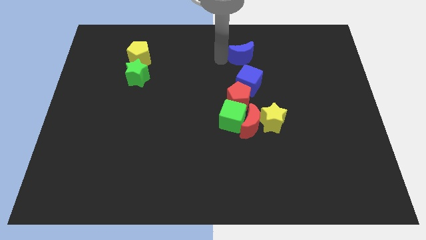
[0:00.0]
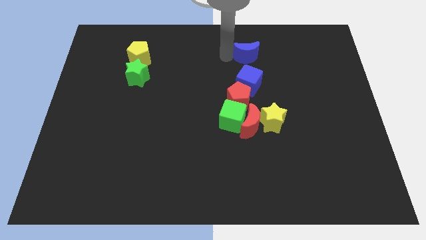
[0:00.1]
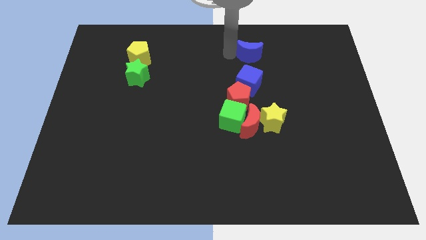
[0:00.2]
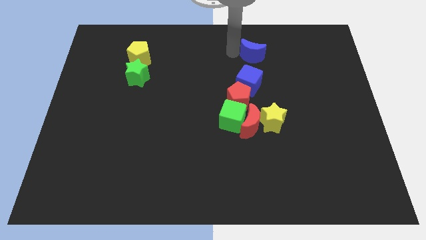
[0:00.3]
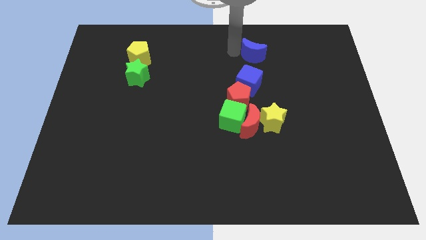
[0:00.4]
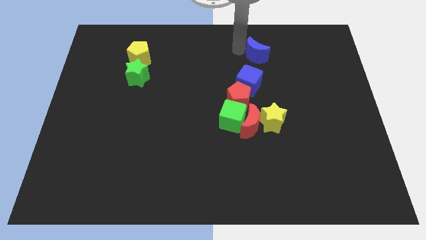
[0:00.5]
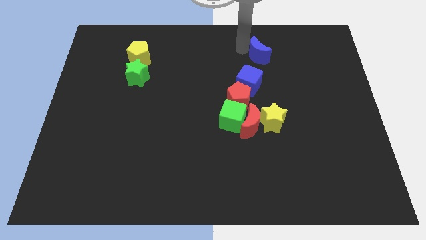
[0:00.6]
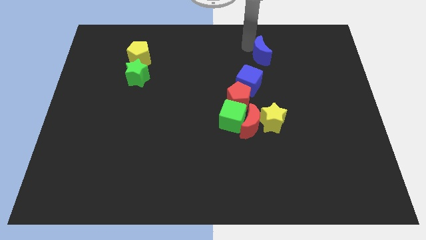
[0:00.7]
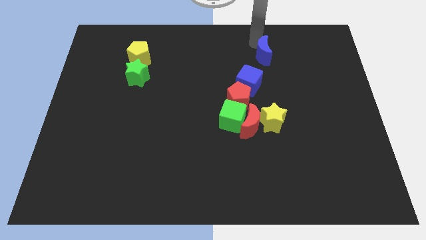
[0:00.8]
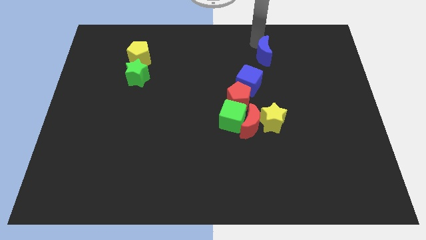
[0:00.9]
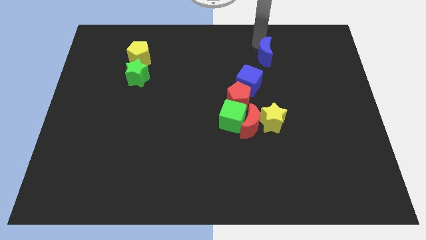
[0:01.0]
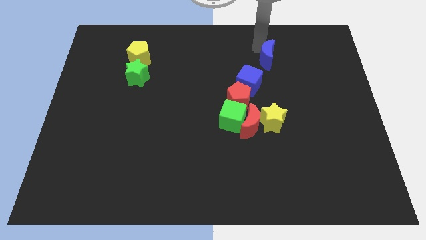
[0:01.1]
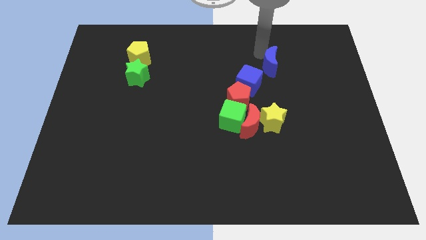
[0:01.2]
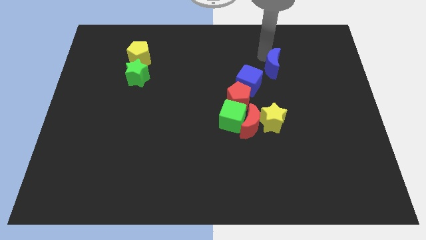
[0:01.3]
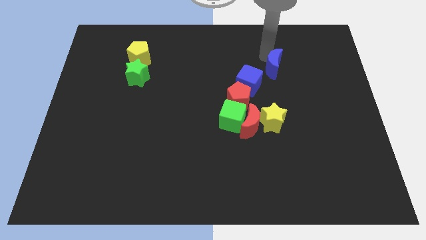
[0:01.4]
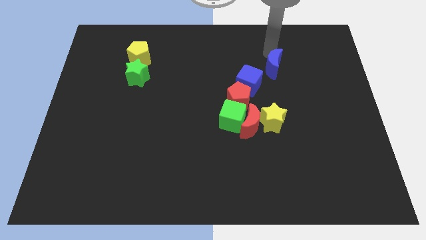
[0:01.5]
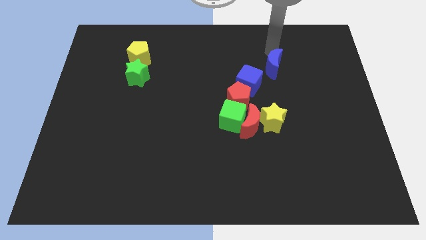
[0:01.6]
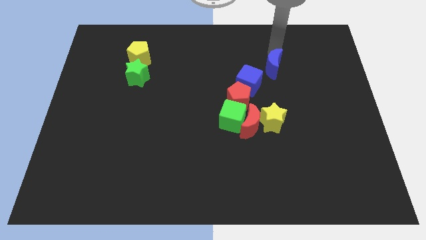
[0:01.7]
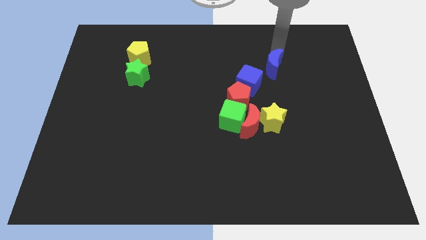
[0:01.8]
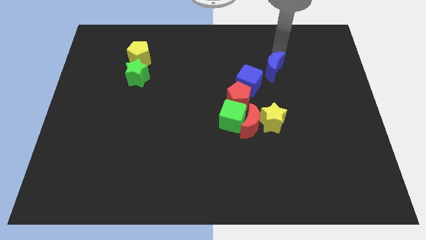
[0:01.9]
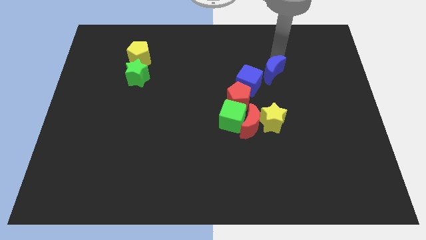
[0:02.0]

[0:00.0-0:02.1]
move the blue moon to the top right side of the blue cube

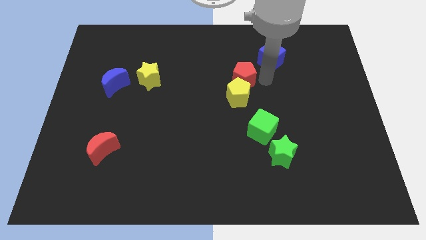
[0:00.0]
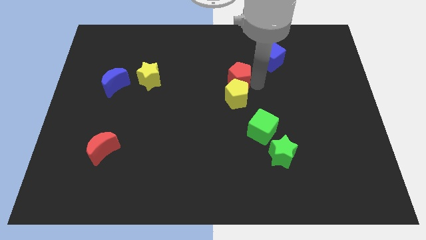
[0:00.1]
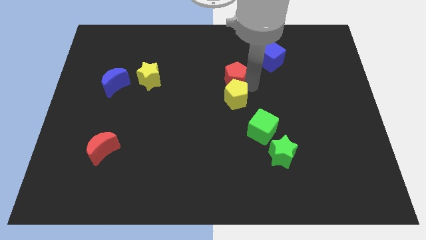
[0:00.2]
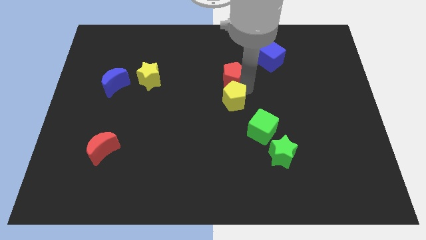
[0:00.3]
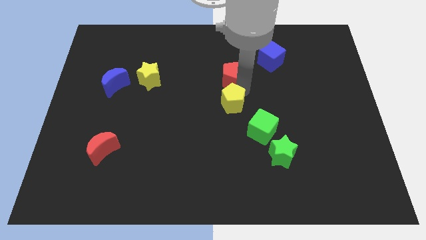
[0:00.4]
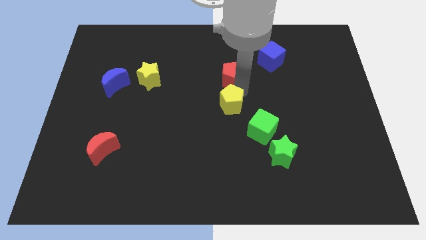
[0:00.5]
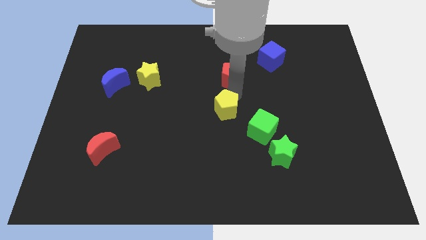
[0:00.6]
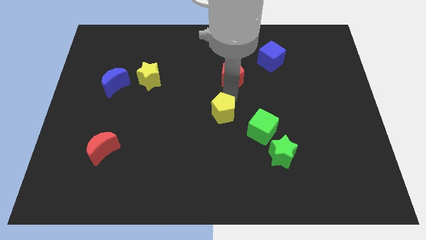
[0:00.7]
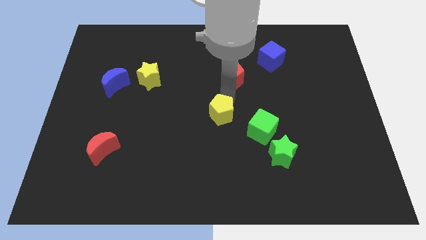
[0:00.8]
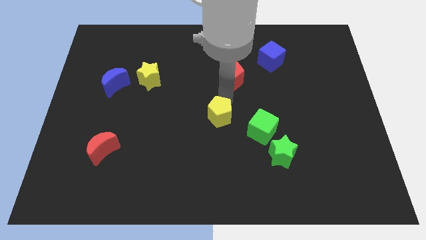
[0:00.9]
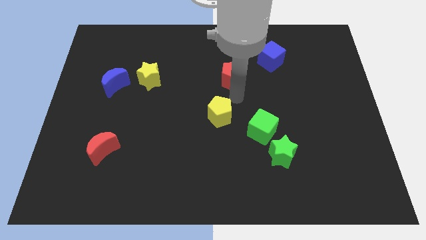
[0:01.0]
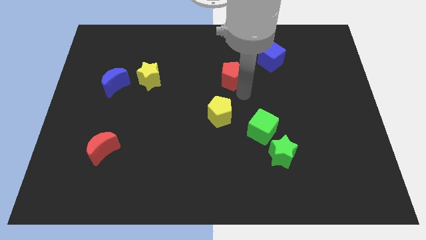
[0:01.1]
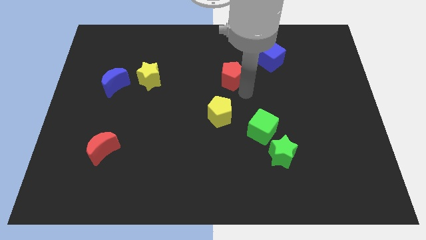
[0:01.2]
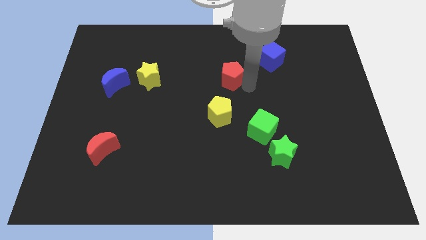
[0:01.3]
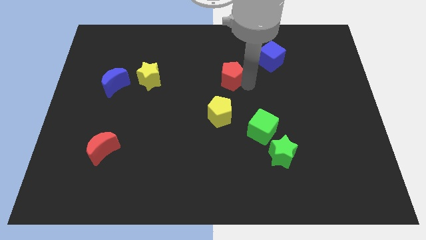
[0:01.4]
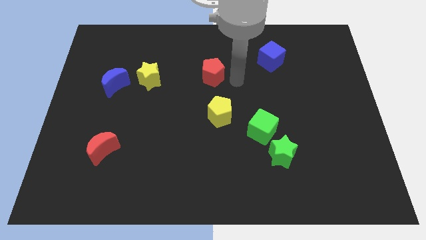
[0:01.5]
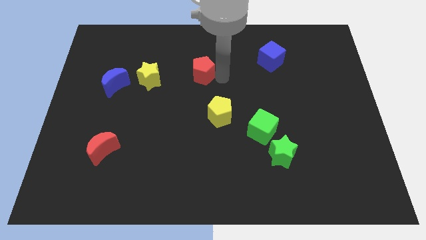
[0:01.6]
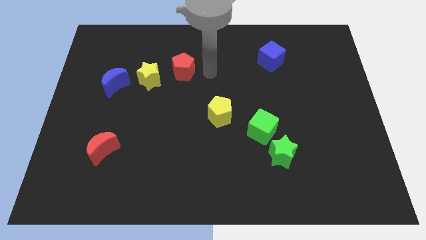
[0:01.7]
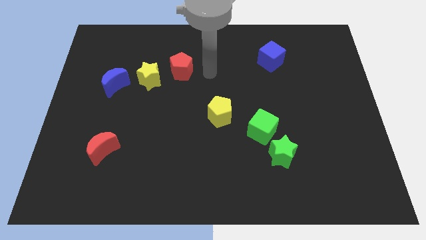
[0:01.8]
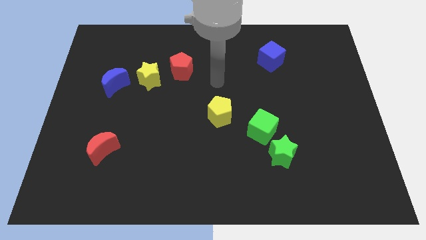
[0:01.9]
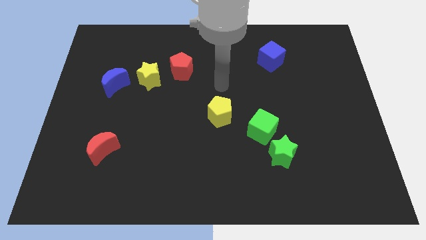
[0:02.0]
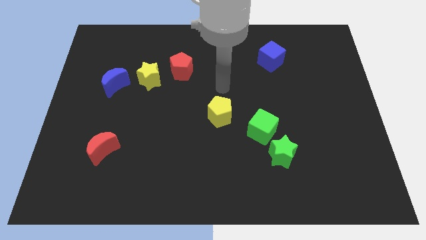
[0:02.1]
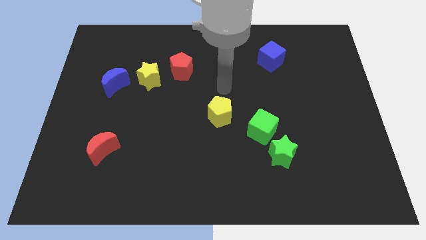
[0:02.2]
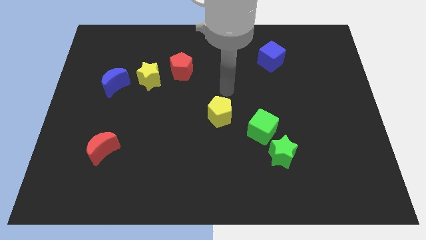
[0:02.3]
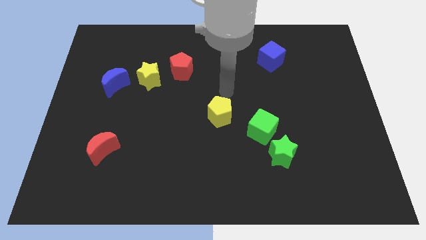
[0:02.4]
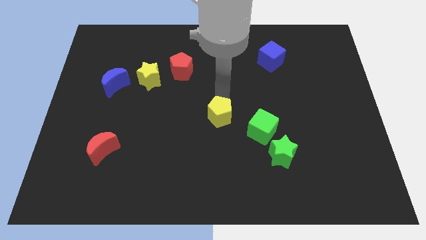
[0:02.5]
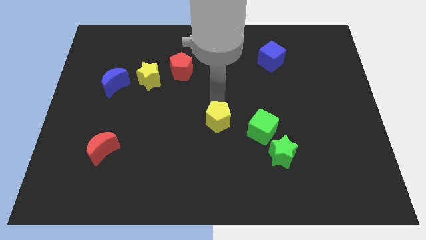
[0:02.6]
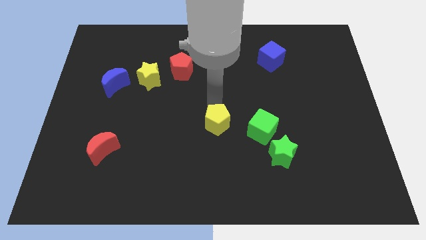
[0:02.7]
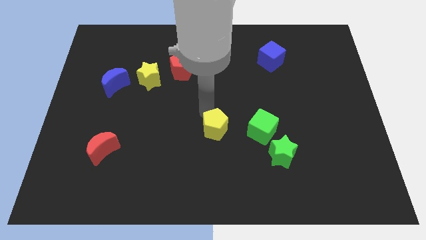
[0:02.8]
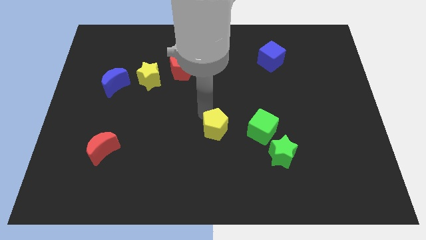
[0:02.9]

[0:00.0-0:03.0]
push the red and yellow pentagons away from each other

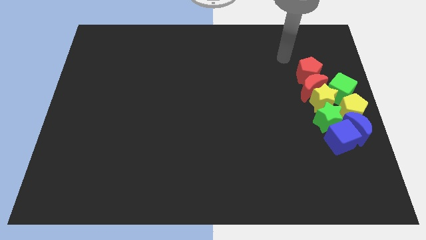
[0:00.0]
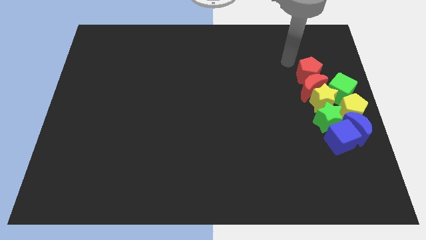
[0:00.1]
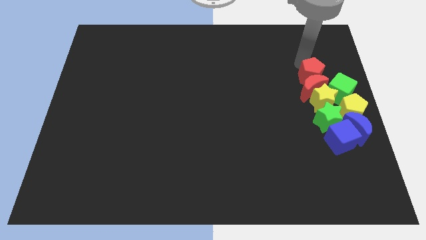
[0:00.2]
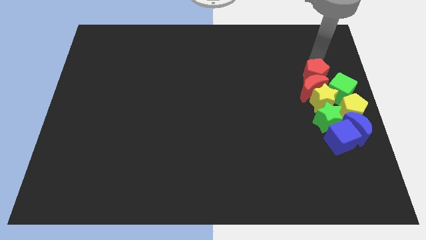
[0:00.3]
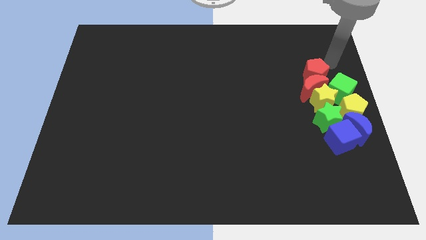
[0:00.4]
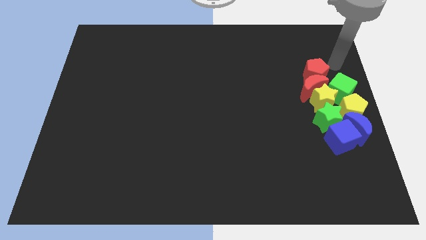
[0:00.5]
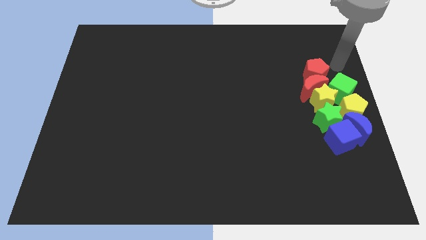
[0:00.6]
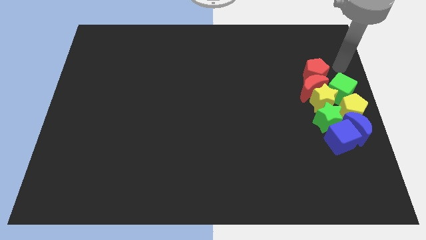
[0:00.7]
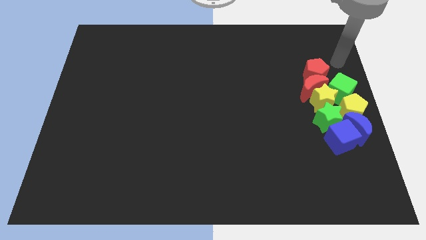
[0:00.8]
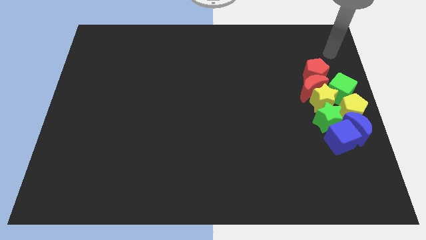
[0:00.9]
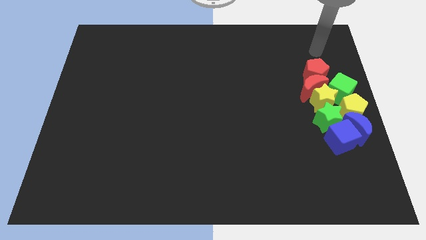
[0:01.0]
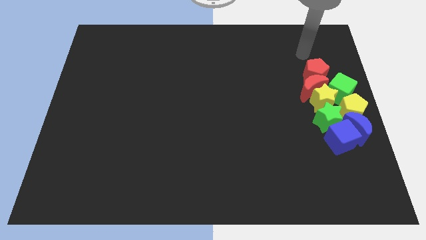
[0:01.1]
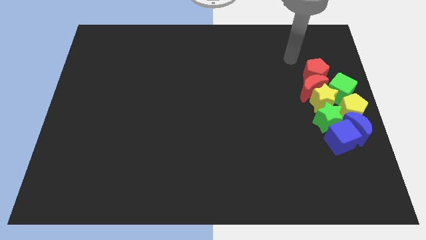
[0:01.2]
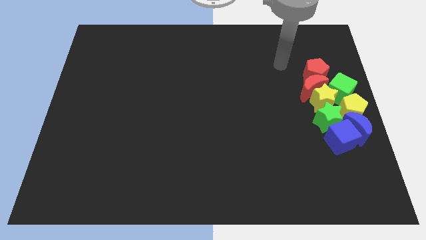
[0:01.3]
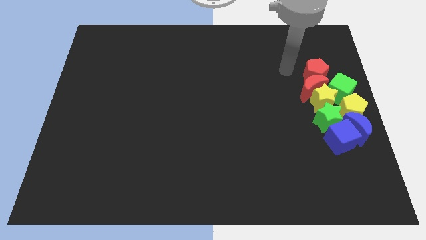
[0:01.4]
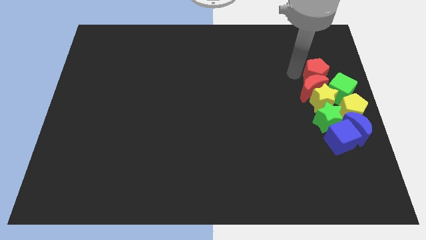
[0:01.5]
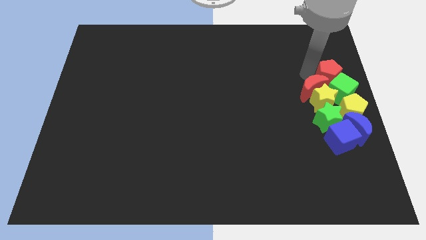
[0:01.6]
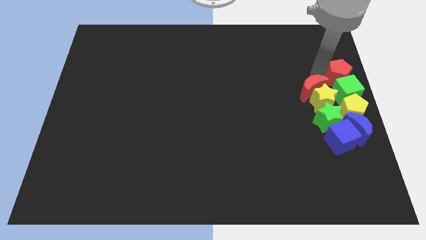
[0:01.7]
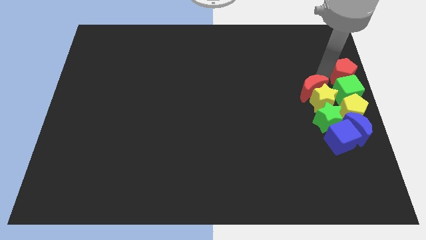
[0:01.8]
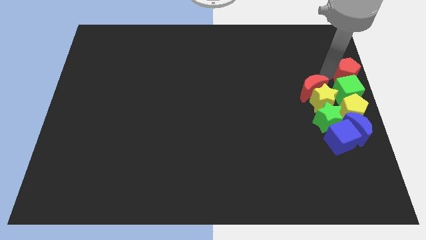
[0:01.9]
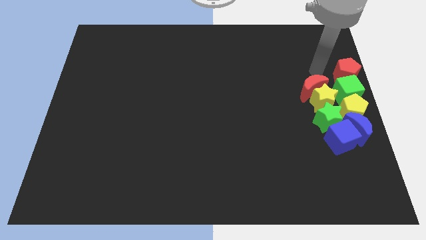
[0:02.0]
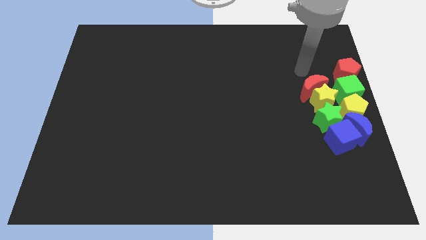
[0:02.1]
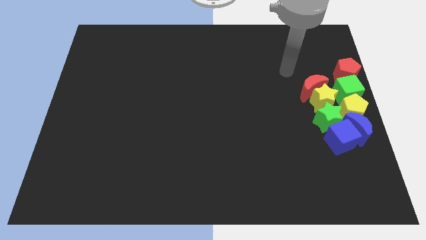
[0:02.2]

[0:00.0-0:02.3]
move the red pentagon above the green cube

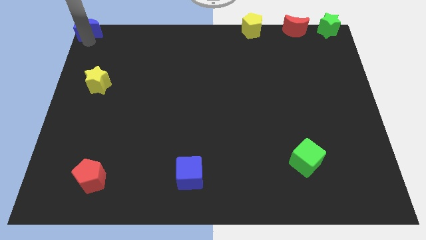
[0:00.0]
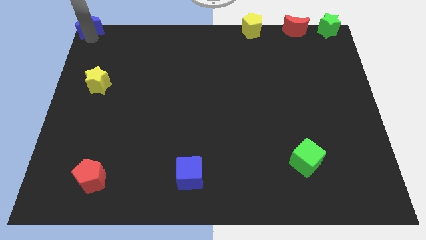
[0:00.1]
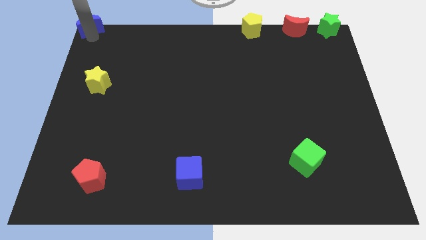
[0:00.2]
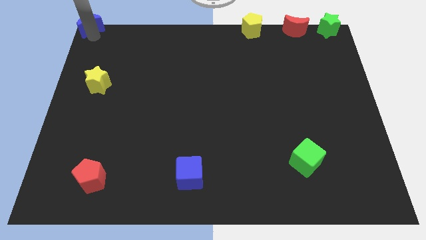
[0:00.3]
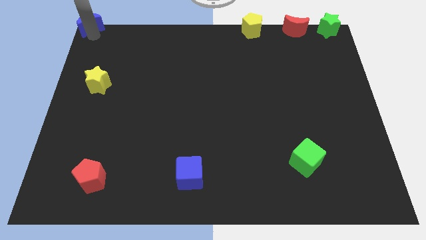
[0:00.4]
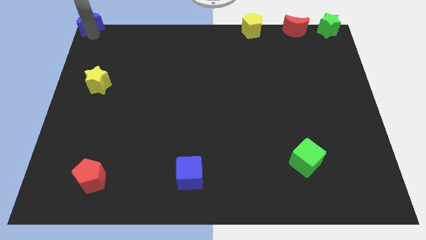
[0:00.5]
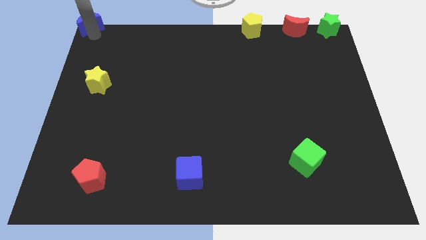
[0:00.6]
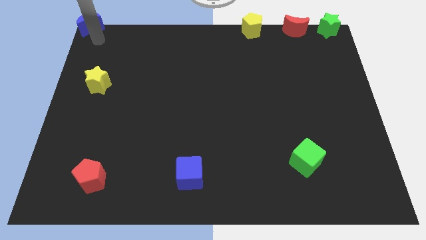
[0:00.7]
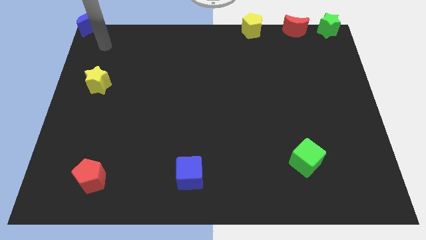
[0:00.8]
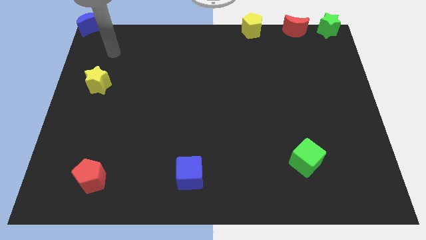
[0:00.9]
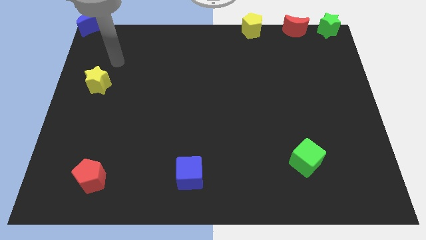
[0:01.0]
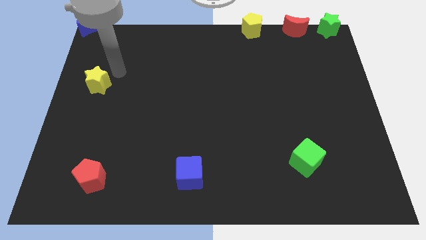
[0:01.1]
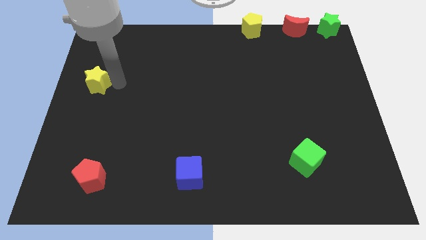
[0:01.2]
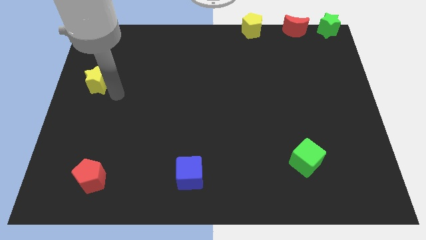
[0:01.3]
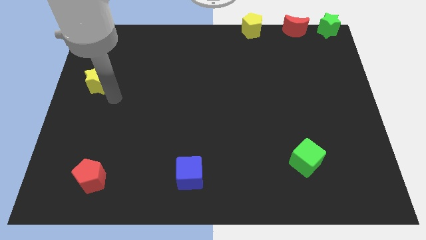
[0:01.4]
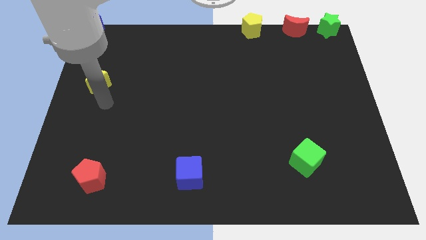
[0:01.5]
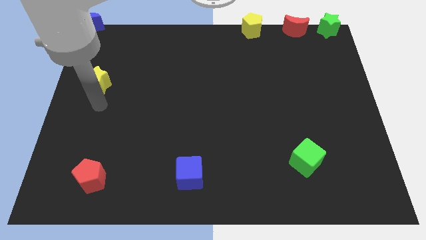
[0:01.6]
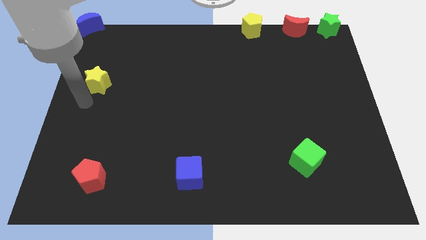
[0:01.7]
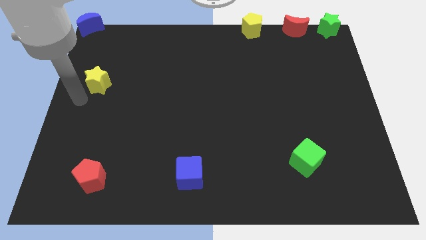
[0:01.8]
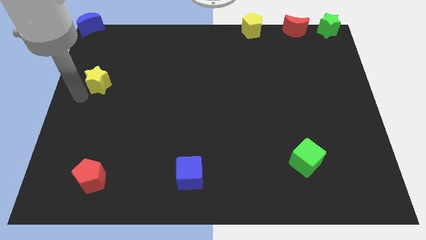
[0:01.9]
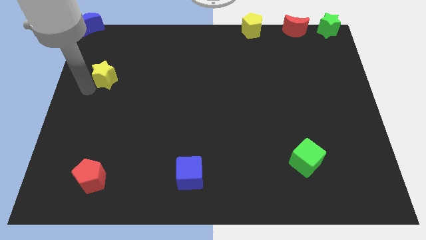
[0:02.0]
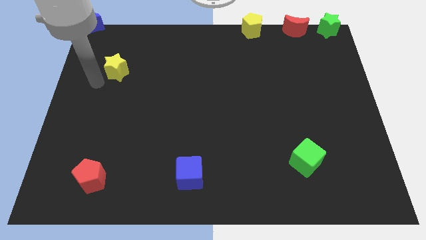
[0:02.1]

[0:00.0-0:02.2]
push the yellow star slightly upwards
